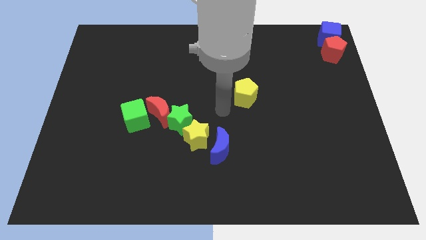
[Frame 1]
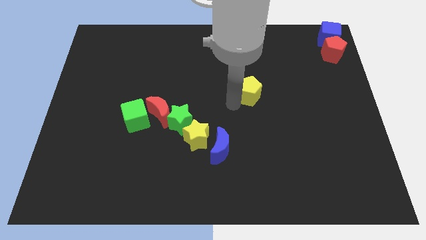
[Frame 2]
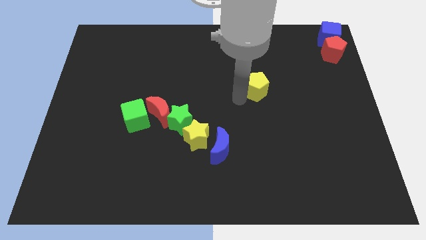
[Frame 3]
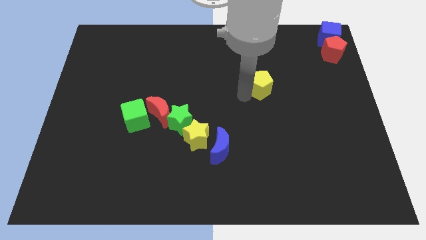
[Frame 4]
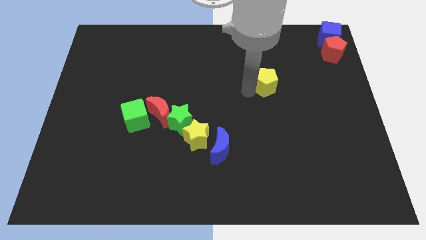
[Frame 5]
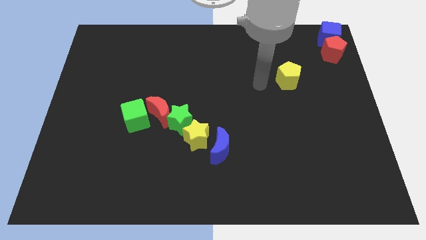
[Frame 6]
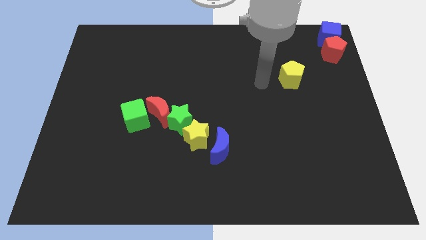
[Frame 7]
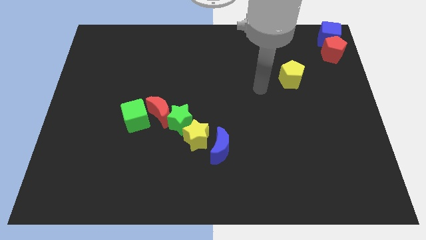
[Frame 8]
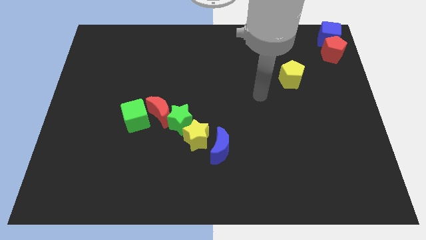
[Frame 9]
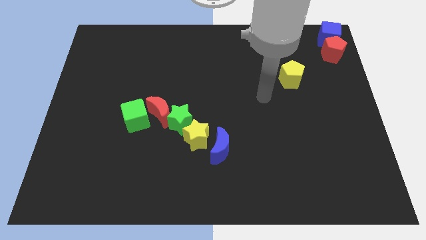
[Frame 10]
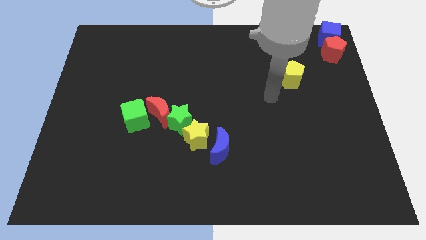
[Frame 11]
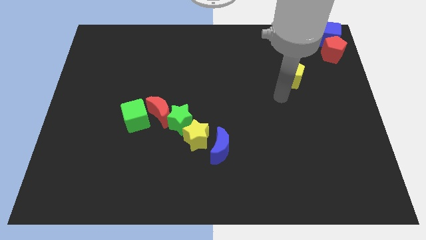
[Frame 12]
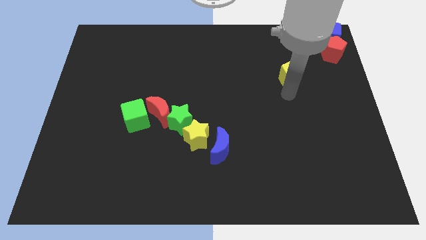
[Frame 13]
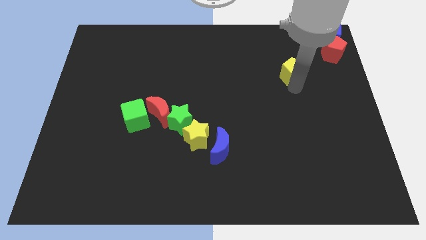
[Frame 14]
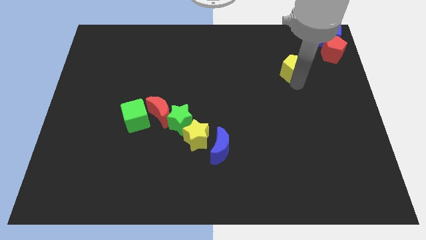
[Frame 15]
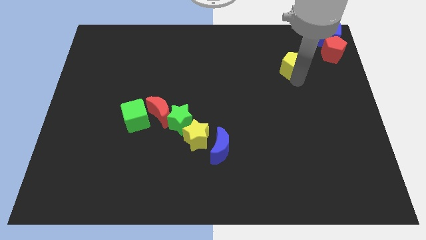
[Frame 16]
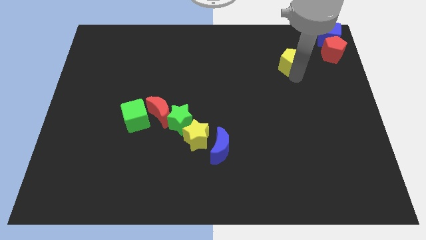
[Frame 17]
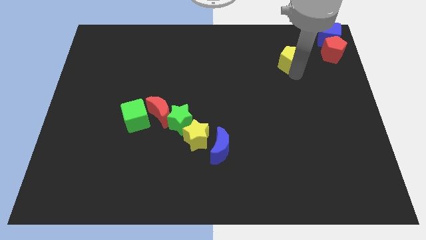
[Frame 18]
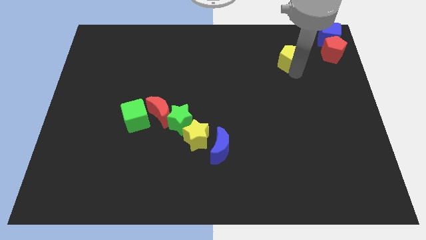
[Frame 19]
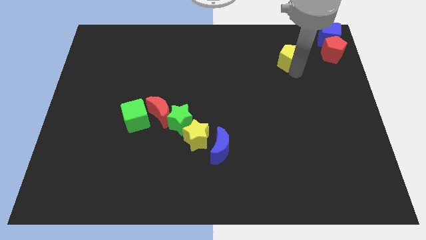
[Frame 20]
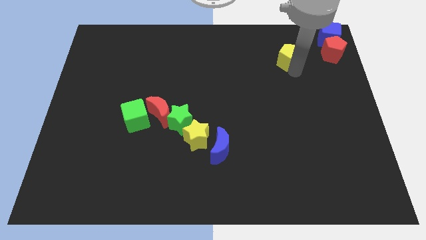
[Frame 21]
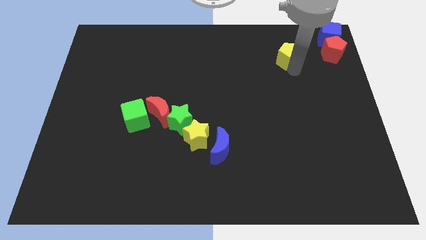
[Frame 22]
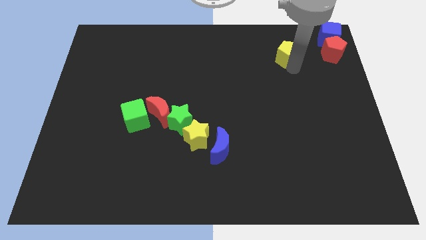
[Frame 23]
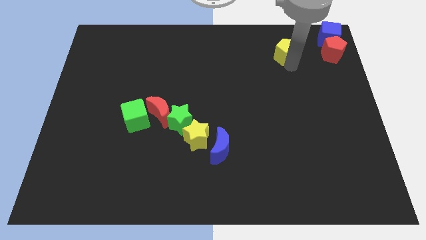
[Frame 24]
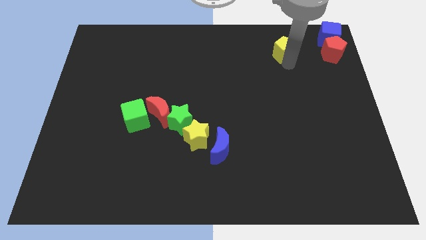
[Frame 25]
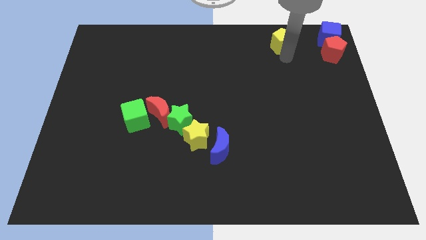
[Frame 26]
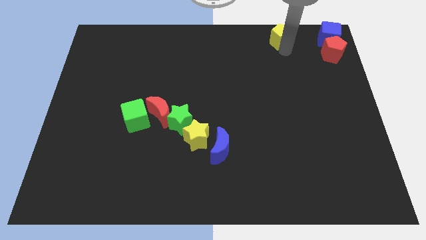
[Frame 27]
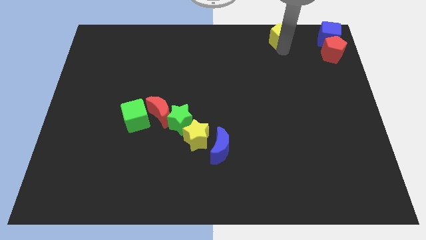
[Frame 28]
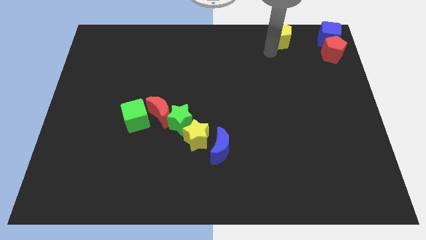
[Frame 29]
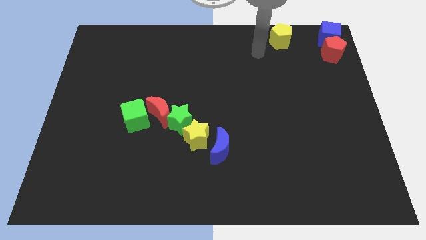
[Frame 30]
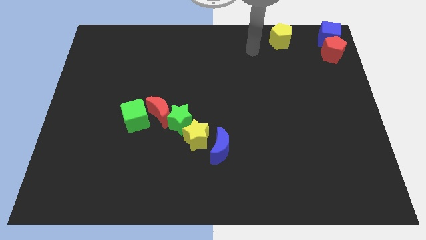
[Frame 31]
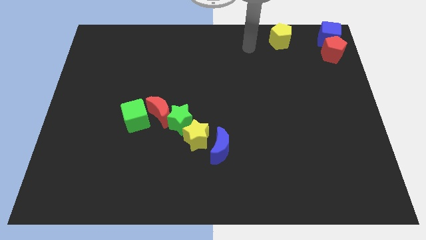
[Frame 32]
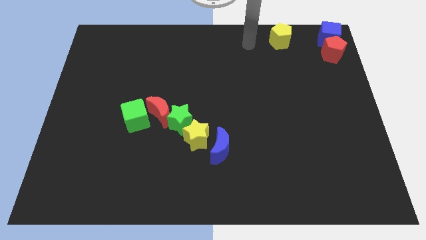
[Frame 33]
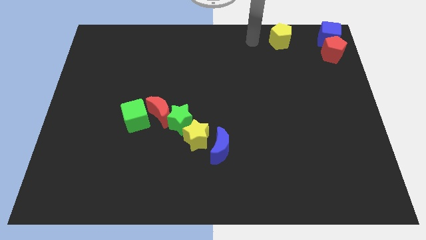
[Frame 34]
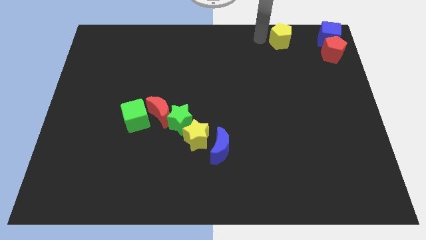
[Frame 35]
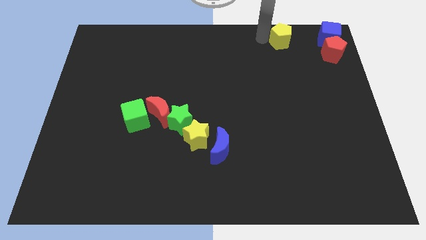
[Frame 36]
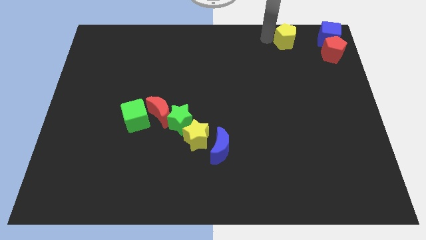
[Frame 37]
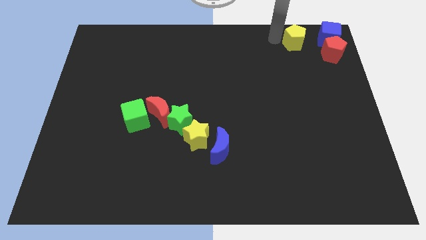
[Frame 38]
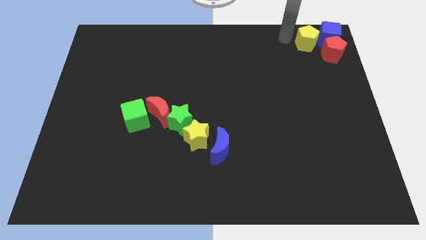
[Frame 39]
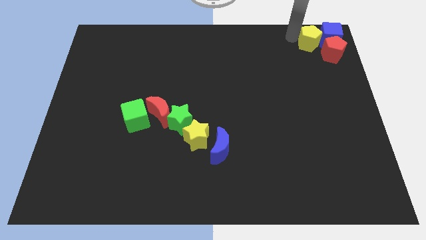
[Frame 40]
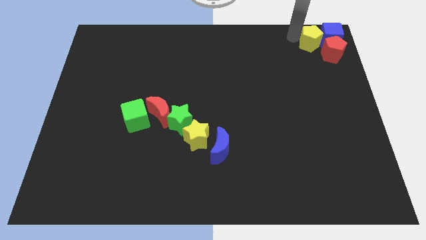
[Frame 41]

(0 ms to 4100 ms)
push the yellow pentagon into the blue cube

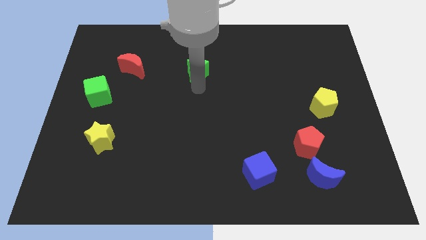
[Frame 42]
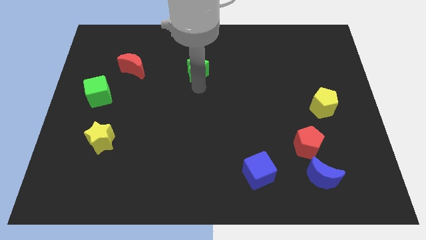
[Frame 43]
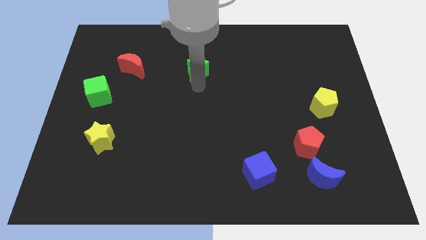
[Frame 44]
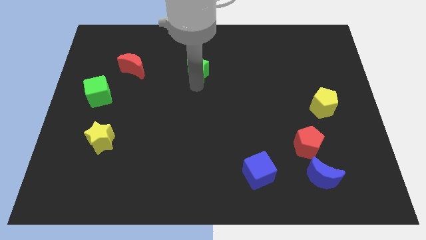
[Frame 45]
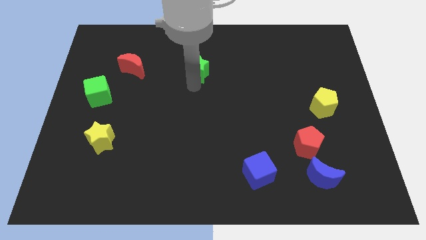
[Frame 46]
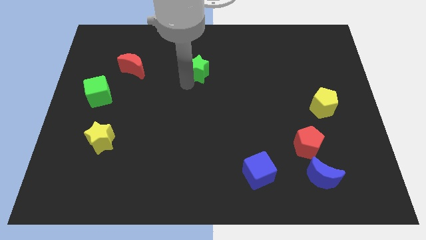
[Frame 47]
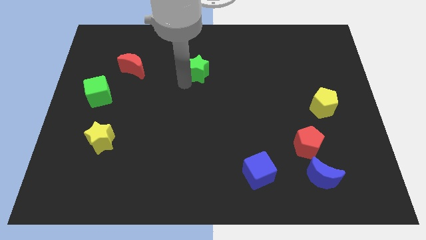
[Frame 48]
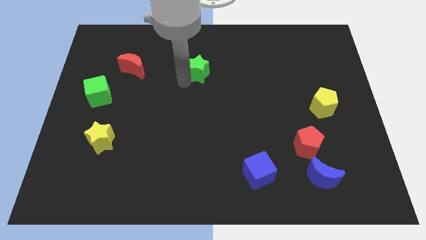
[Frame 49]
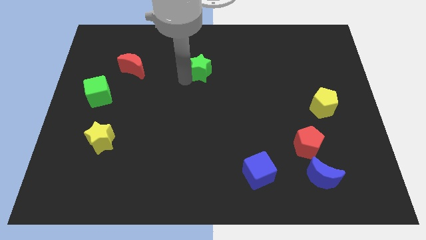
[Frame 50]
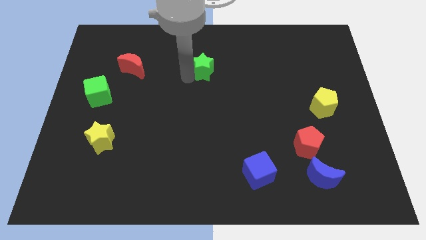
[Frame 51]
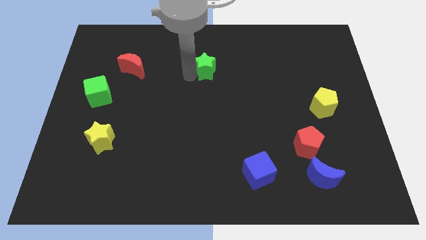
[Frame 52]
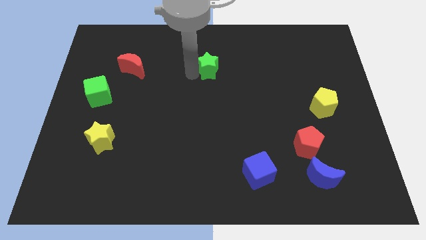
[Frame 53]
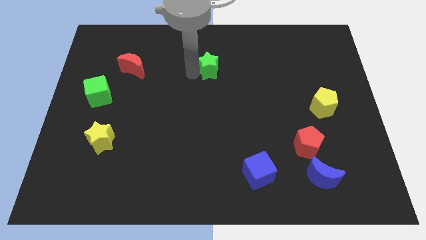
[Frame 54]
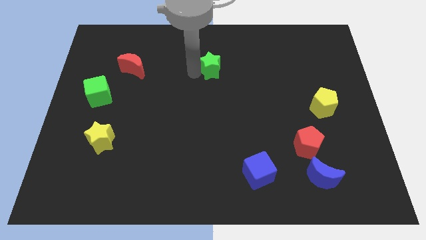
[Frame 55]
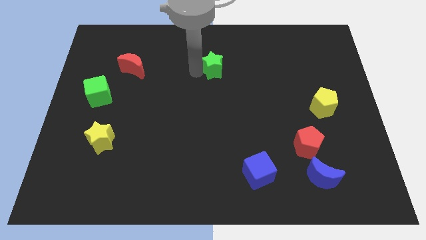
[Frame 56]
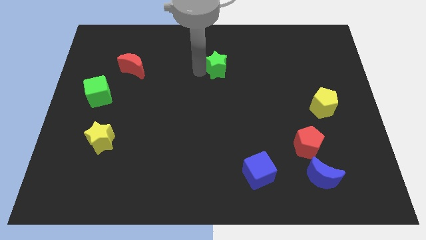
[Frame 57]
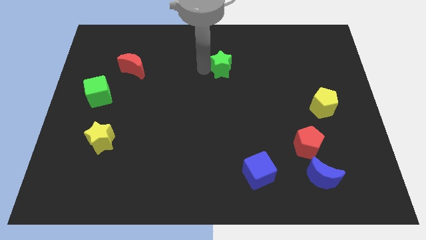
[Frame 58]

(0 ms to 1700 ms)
push the green star slightly to the right

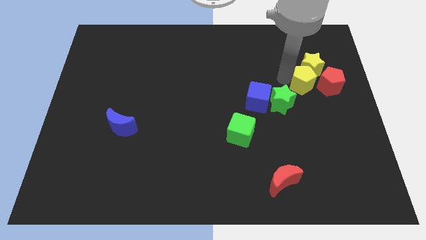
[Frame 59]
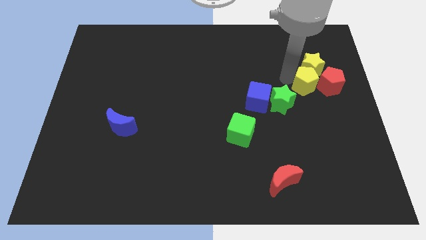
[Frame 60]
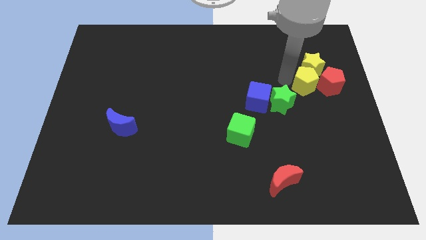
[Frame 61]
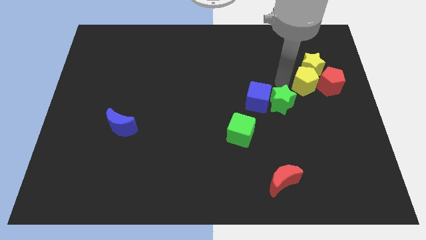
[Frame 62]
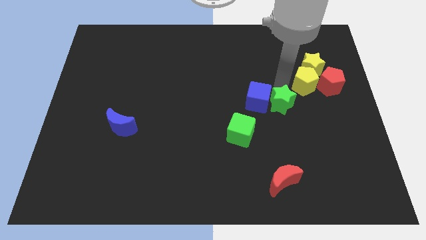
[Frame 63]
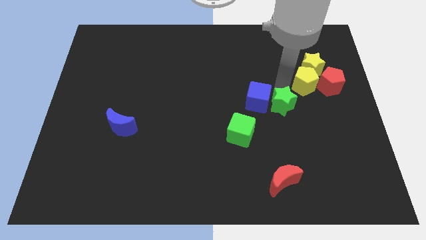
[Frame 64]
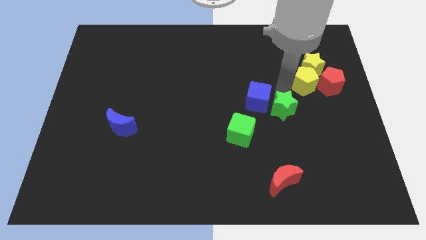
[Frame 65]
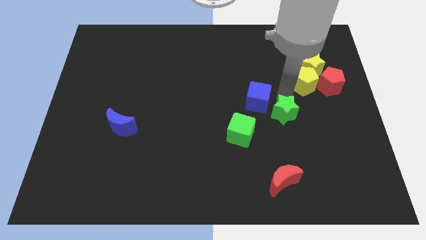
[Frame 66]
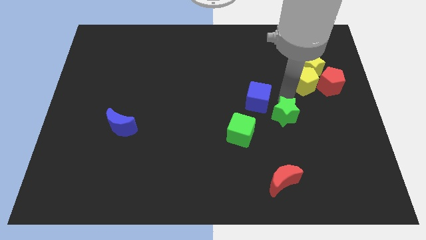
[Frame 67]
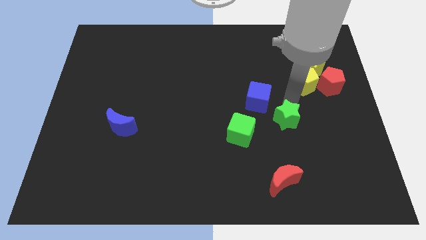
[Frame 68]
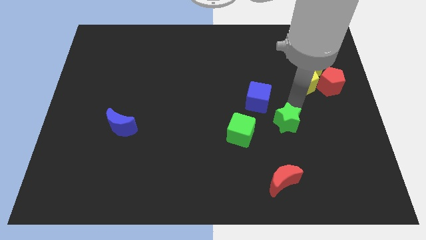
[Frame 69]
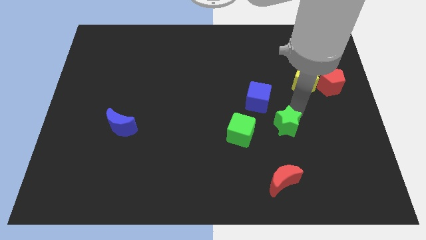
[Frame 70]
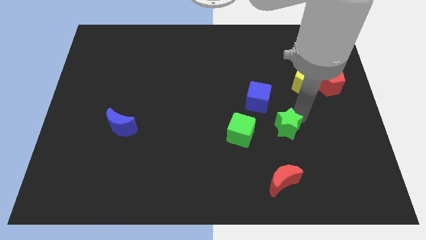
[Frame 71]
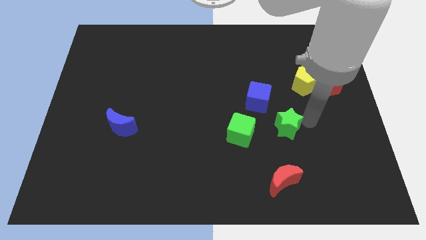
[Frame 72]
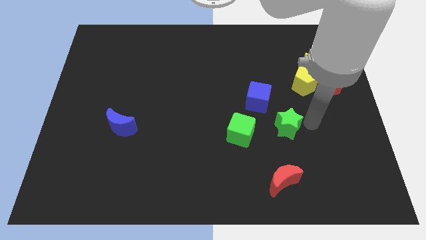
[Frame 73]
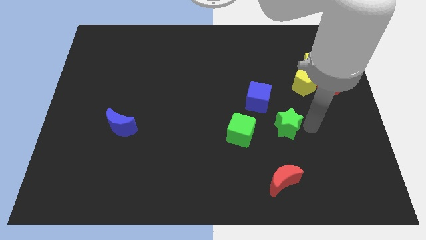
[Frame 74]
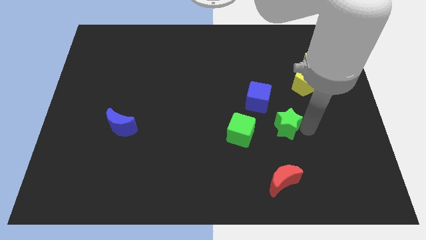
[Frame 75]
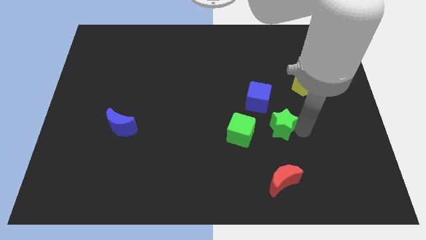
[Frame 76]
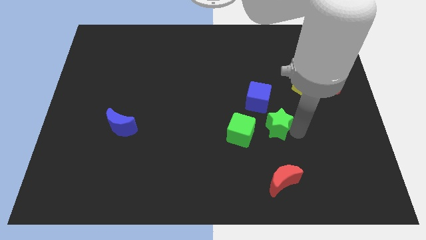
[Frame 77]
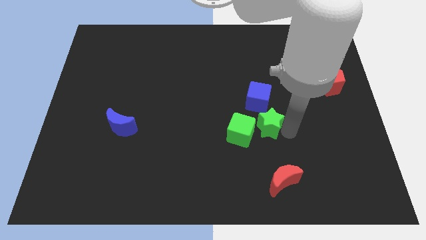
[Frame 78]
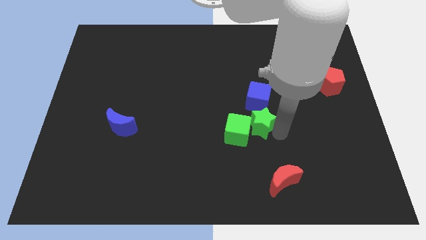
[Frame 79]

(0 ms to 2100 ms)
push the green star near to the green cube

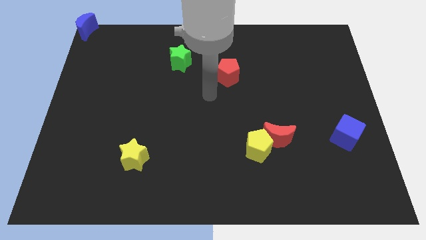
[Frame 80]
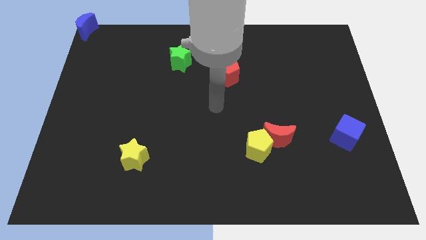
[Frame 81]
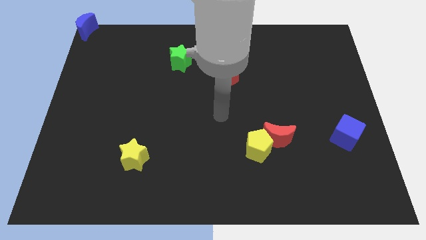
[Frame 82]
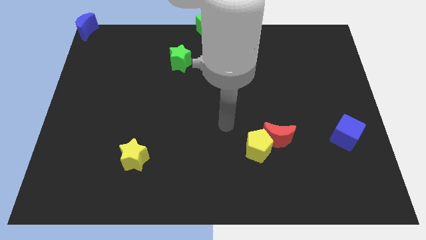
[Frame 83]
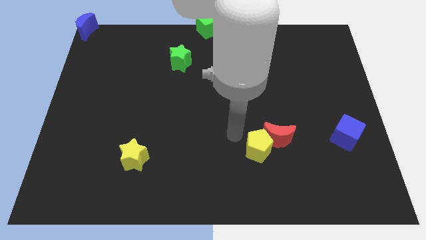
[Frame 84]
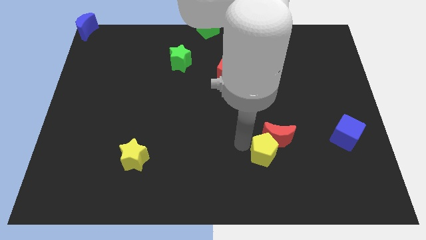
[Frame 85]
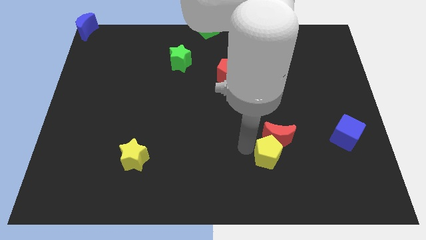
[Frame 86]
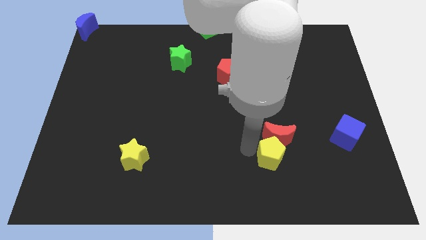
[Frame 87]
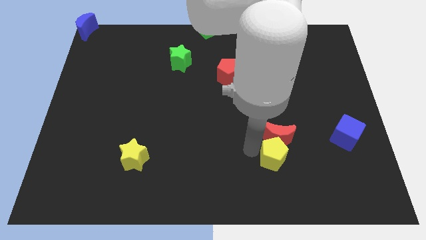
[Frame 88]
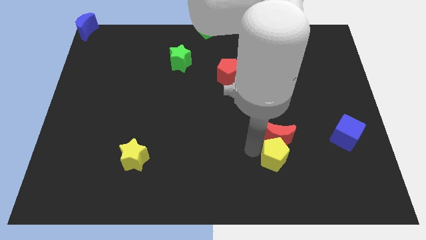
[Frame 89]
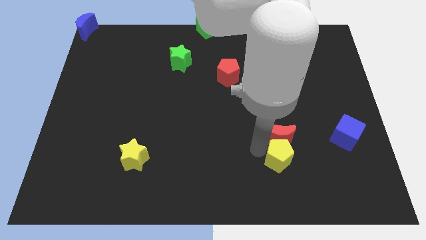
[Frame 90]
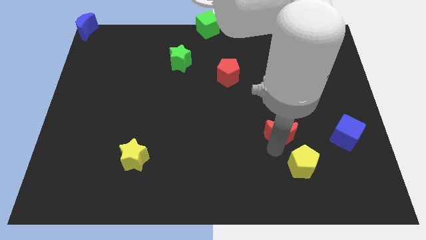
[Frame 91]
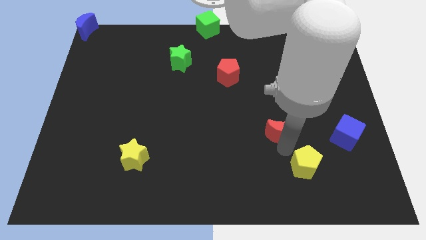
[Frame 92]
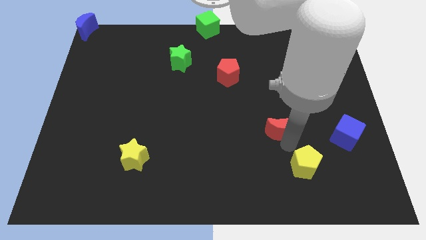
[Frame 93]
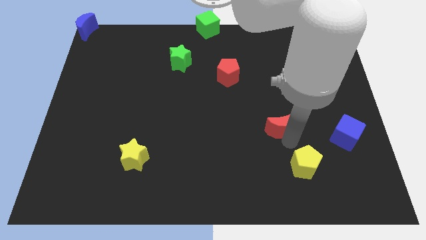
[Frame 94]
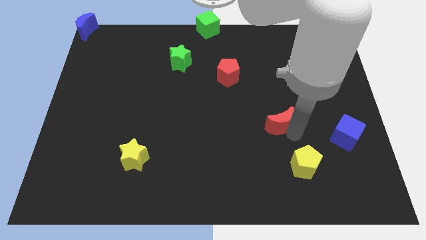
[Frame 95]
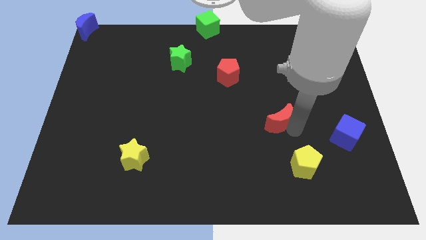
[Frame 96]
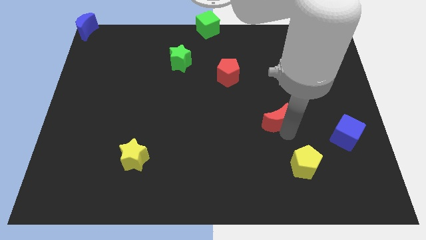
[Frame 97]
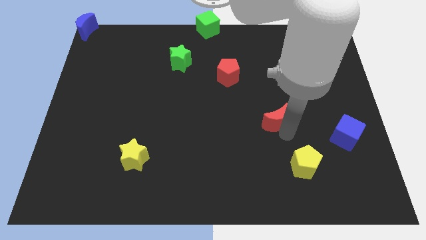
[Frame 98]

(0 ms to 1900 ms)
separate the red crescent from the yellow pentagon
